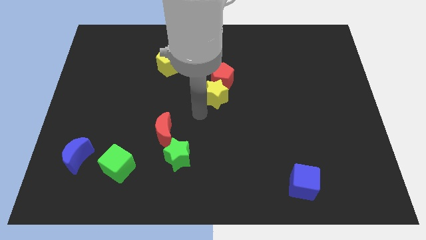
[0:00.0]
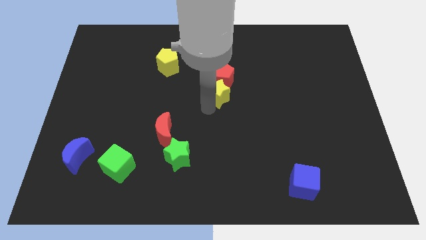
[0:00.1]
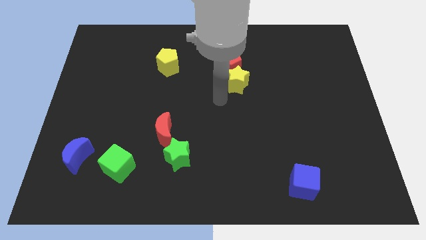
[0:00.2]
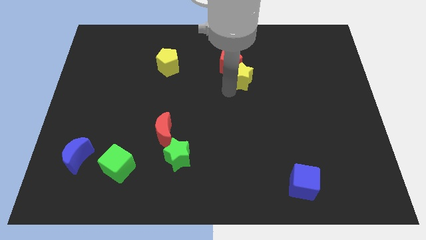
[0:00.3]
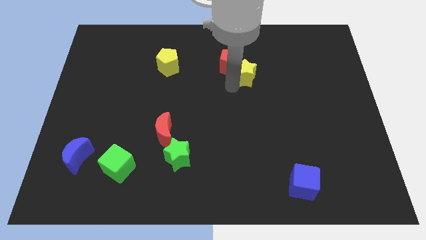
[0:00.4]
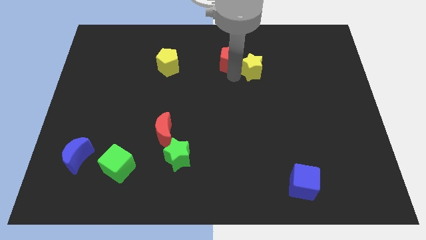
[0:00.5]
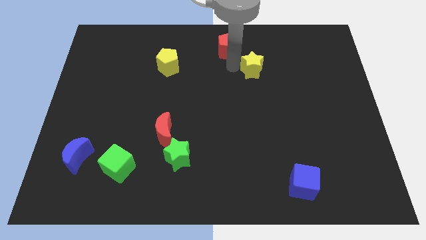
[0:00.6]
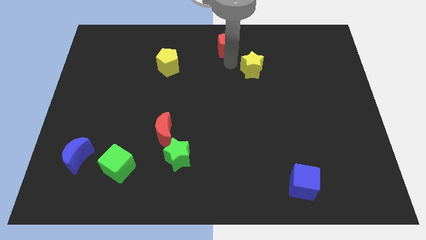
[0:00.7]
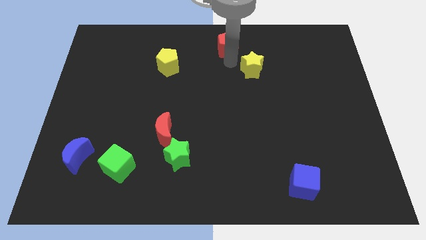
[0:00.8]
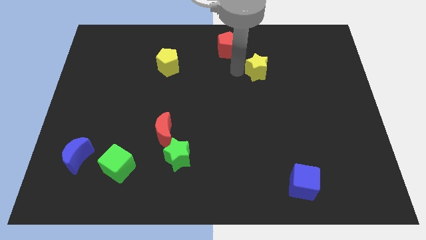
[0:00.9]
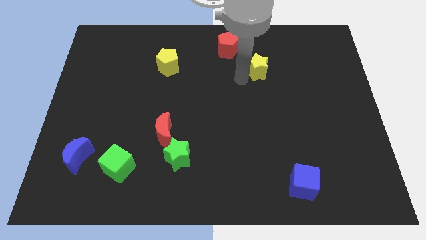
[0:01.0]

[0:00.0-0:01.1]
separate yellow star and red pentagon

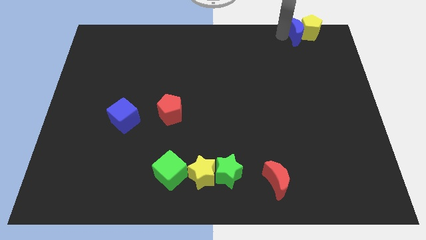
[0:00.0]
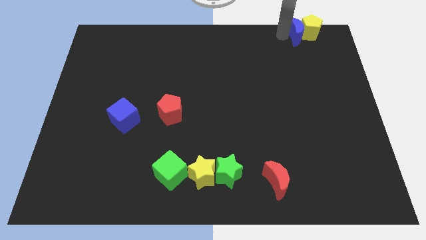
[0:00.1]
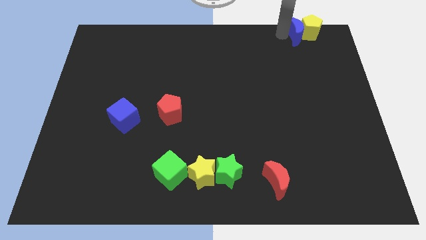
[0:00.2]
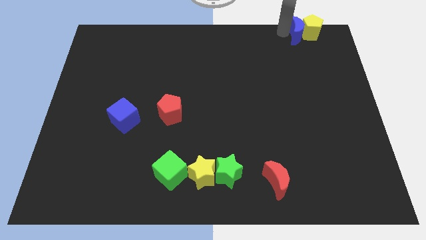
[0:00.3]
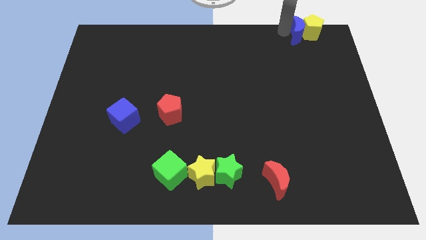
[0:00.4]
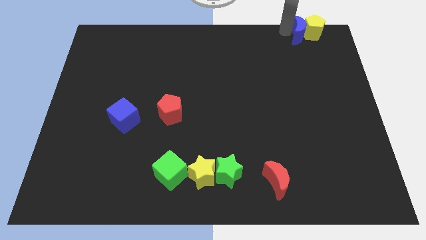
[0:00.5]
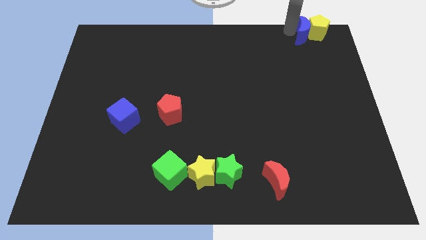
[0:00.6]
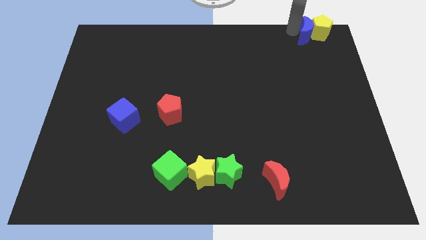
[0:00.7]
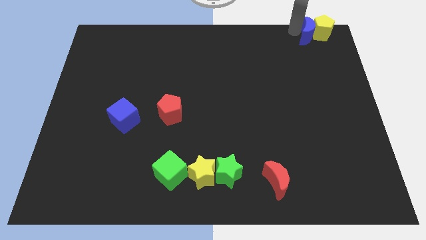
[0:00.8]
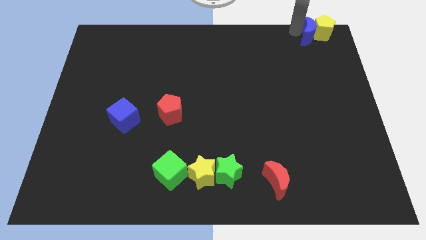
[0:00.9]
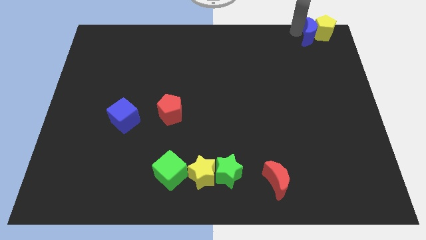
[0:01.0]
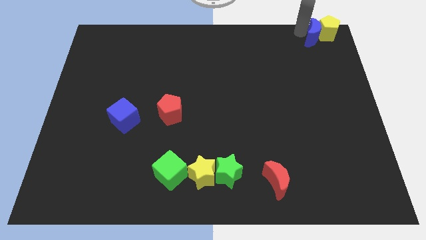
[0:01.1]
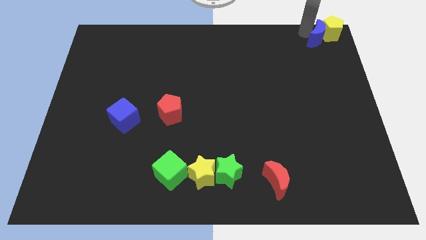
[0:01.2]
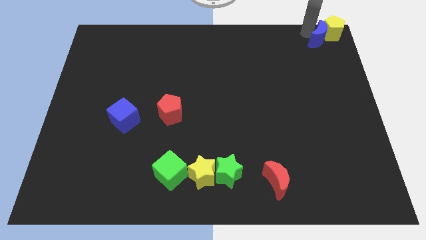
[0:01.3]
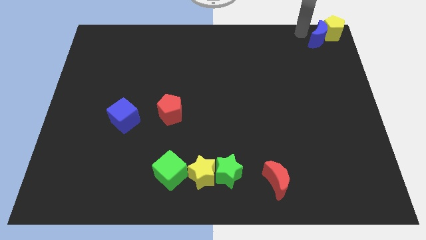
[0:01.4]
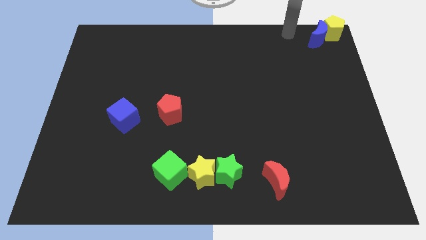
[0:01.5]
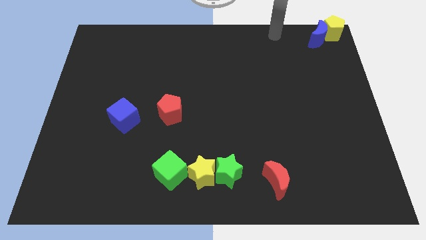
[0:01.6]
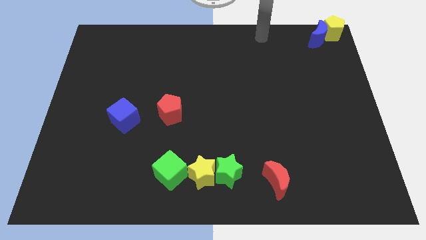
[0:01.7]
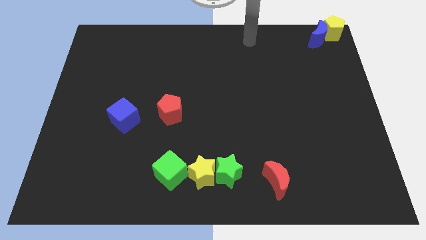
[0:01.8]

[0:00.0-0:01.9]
place the yellow pentagon and the blue moon to the top right corner of the board

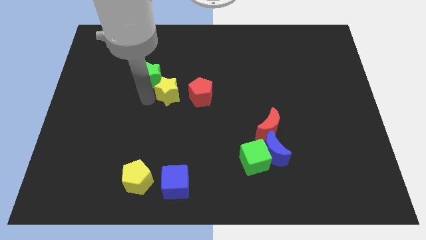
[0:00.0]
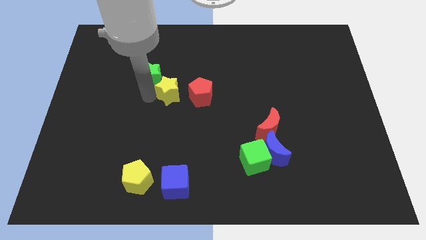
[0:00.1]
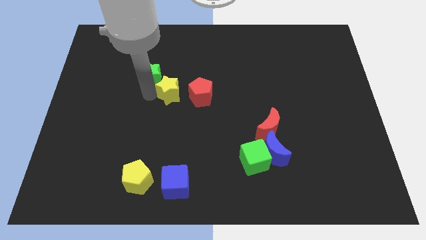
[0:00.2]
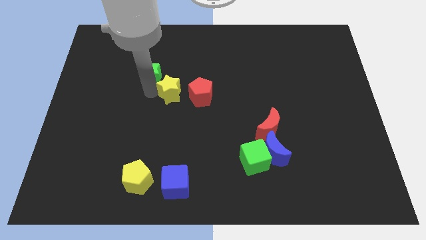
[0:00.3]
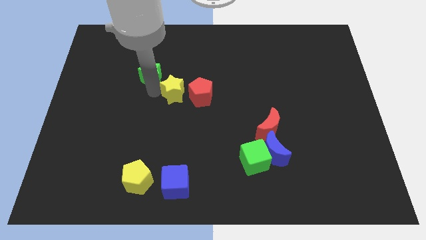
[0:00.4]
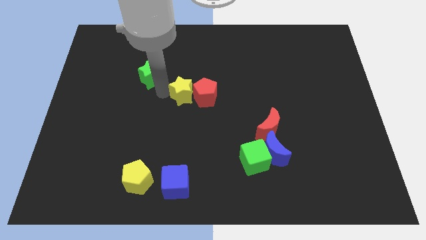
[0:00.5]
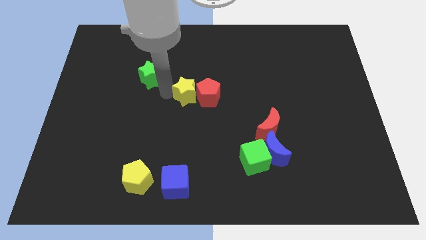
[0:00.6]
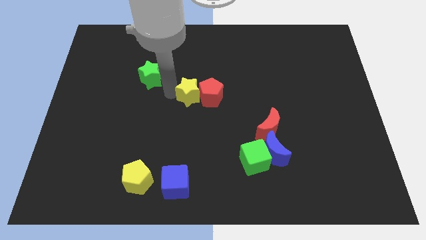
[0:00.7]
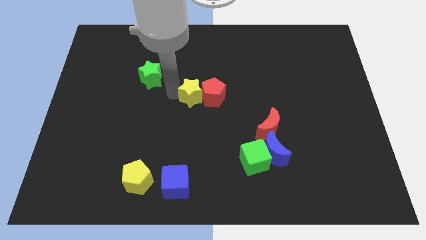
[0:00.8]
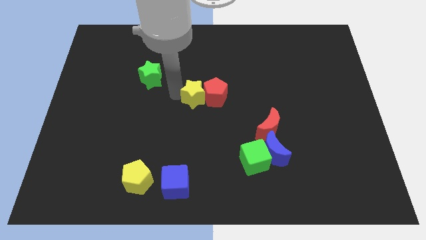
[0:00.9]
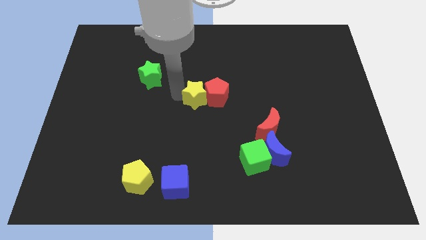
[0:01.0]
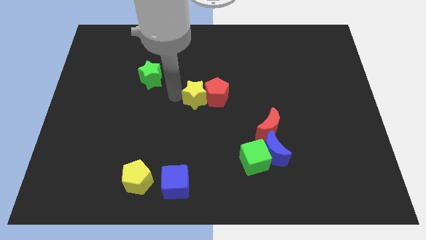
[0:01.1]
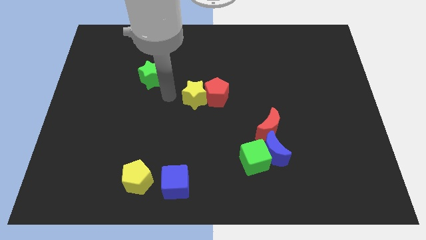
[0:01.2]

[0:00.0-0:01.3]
push the yellow star into the red pentagon

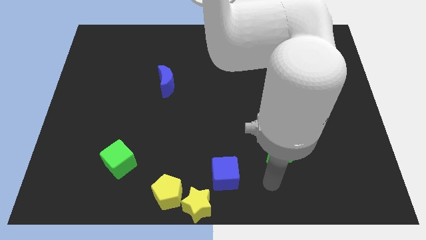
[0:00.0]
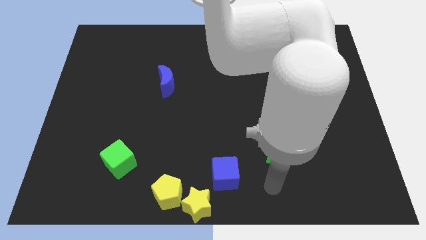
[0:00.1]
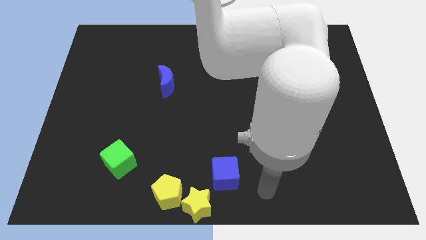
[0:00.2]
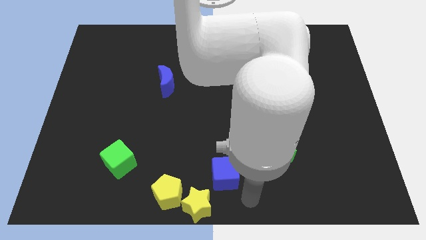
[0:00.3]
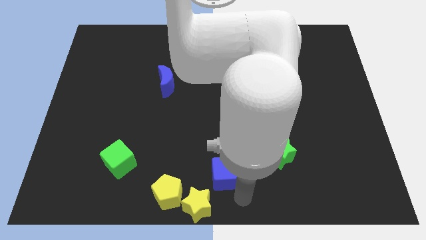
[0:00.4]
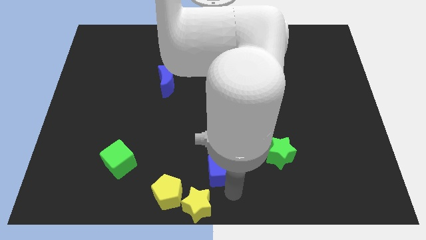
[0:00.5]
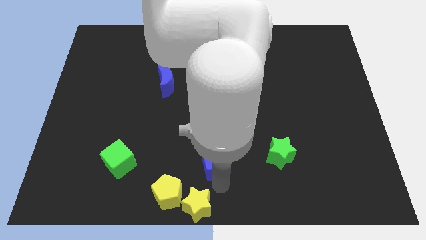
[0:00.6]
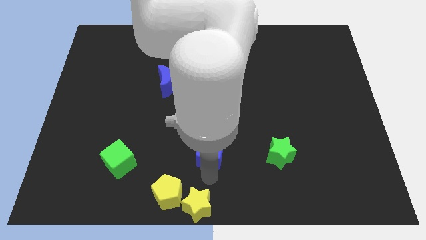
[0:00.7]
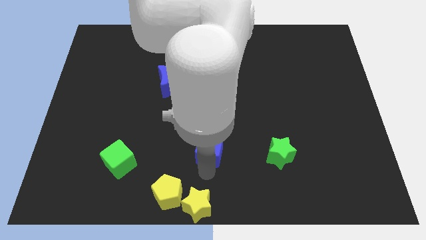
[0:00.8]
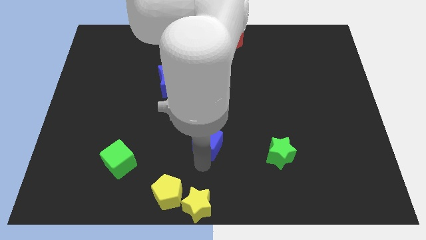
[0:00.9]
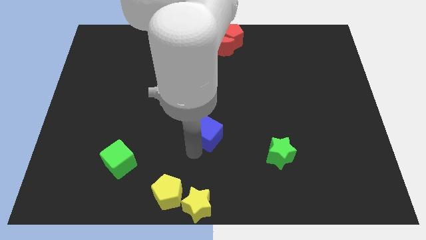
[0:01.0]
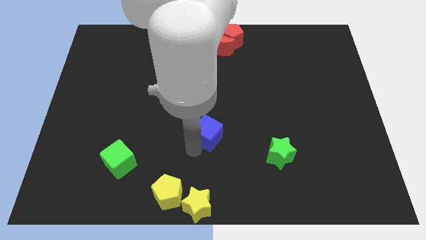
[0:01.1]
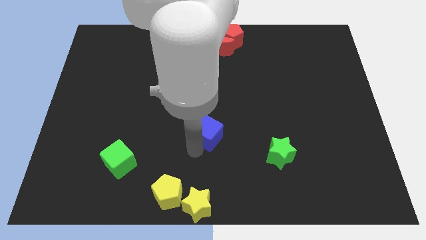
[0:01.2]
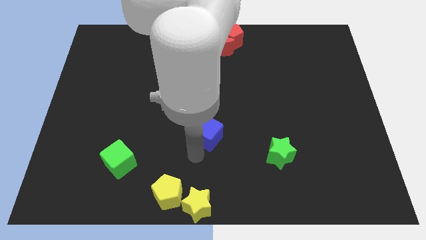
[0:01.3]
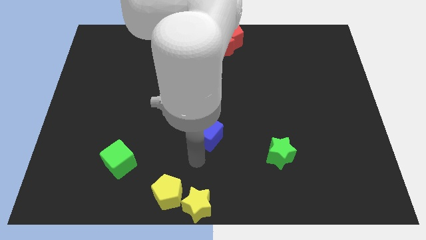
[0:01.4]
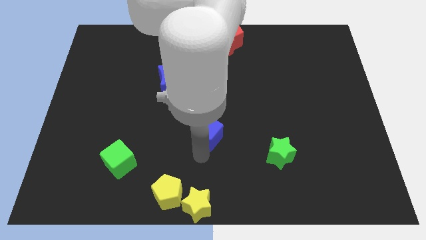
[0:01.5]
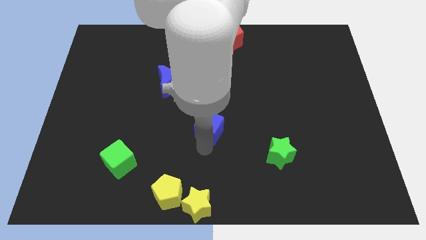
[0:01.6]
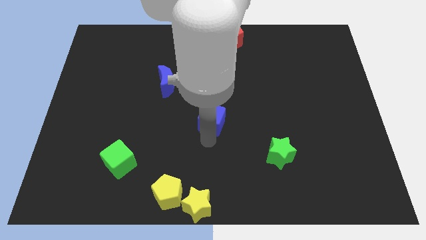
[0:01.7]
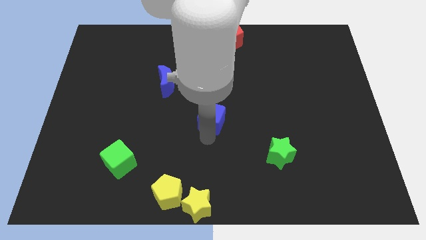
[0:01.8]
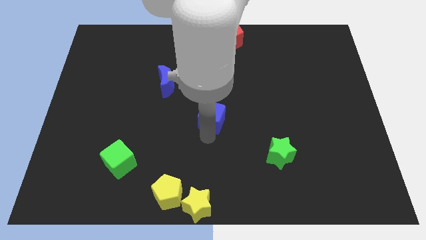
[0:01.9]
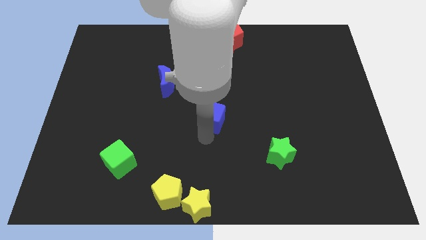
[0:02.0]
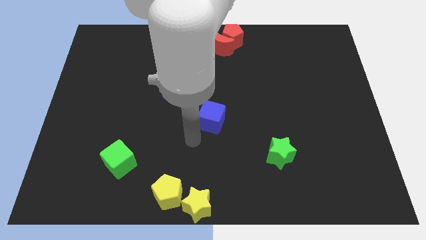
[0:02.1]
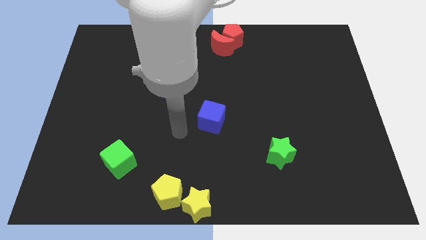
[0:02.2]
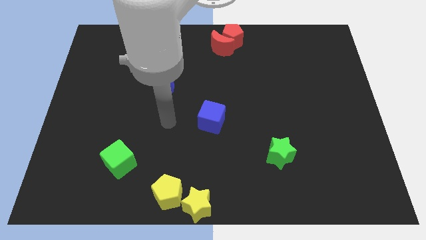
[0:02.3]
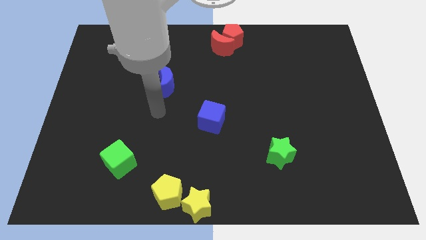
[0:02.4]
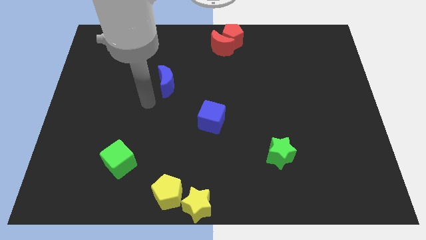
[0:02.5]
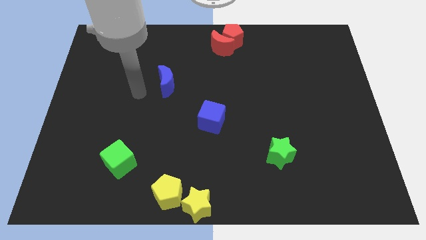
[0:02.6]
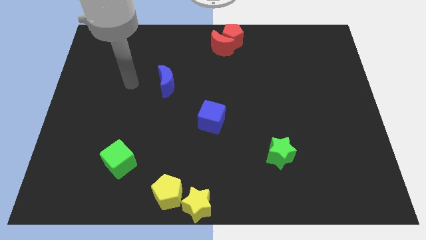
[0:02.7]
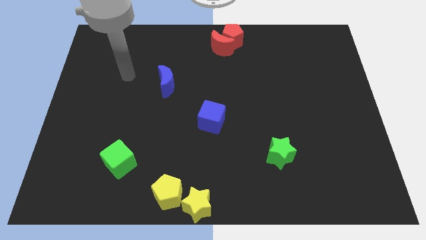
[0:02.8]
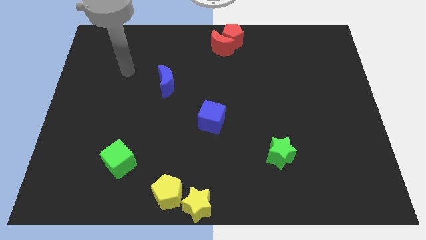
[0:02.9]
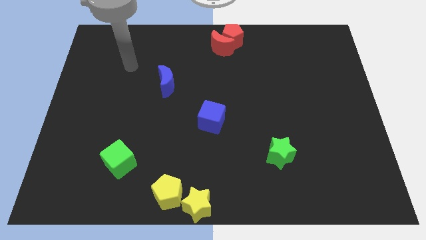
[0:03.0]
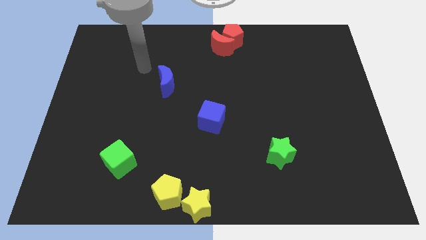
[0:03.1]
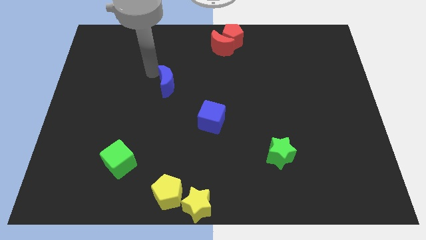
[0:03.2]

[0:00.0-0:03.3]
push blue cube towards the center of the board

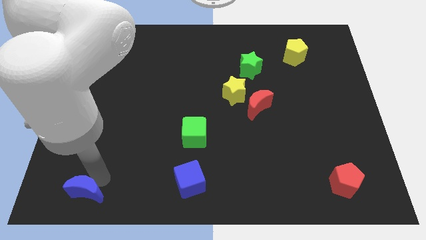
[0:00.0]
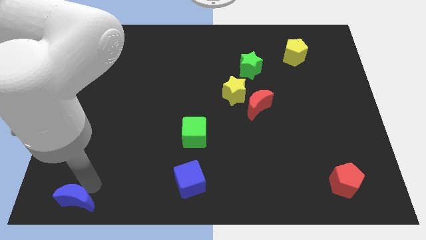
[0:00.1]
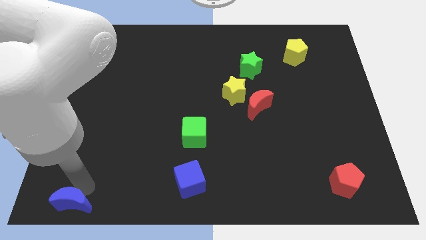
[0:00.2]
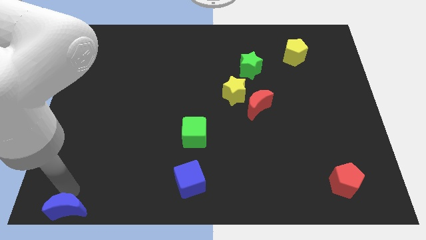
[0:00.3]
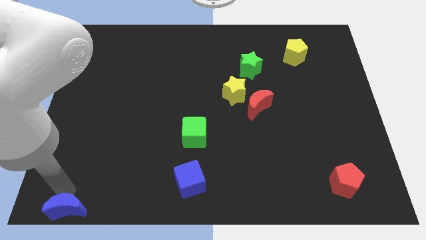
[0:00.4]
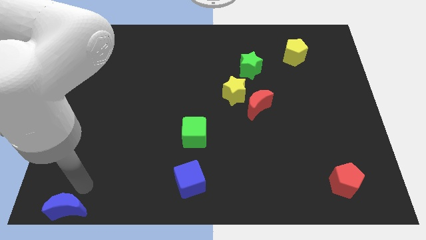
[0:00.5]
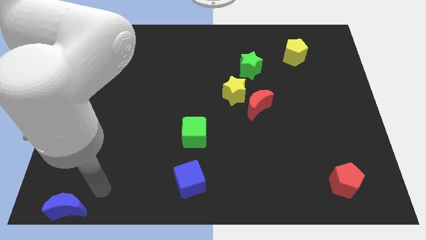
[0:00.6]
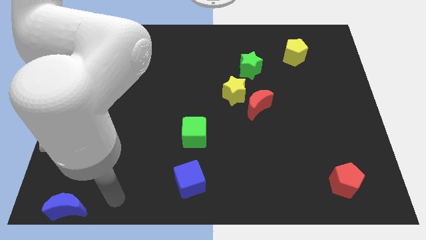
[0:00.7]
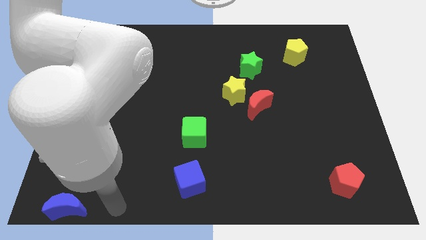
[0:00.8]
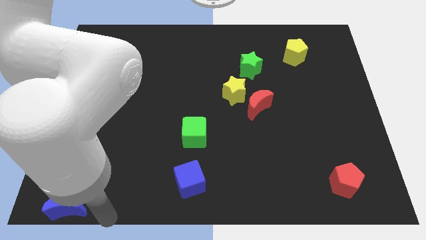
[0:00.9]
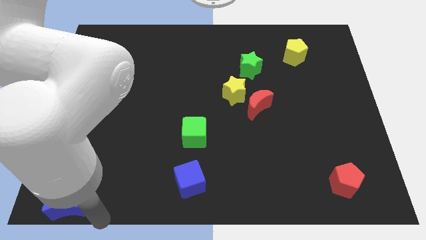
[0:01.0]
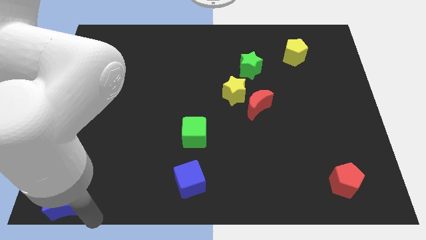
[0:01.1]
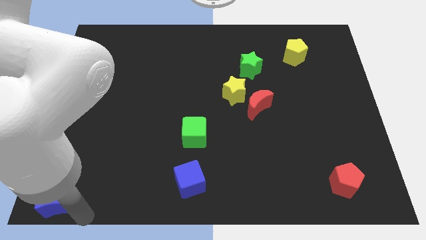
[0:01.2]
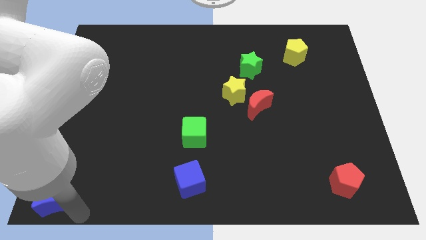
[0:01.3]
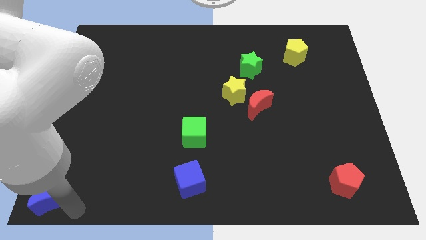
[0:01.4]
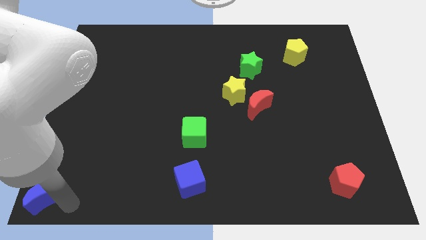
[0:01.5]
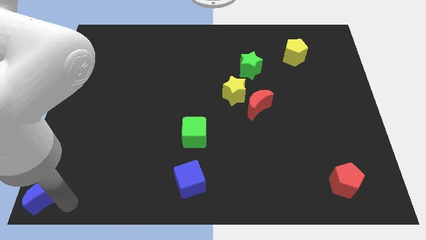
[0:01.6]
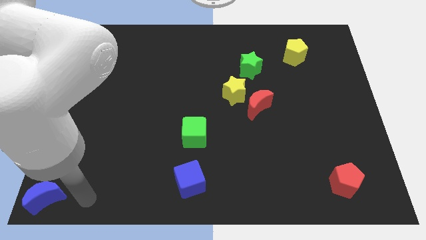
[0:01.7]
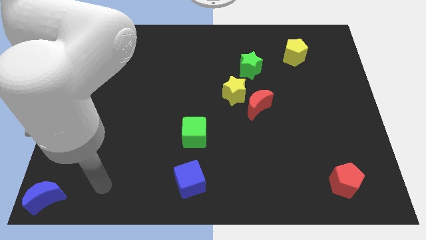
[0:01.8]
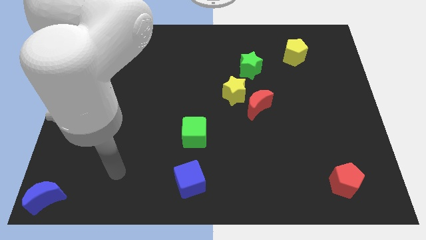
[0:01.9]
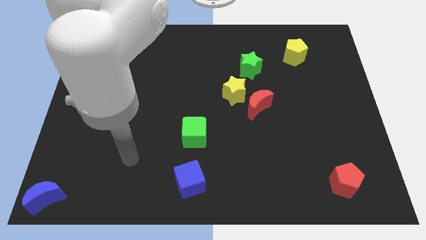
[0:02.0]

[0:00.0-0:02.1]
slide blue moon to the bottom left corner
